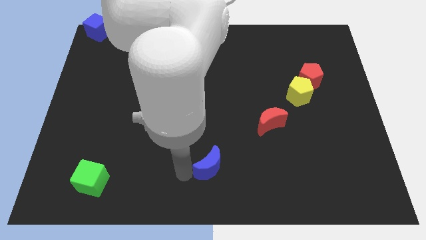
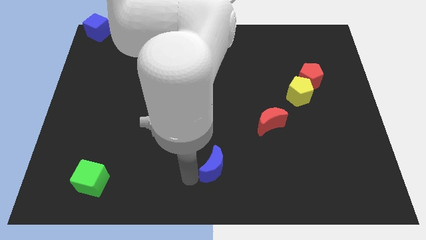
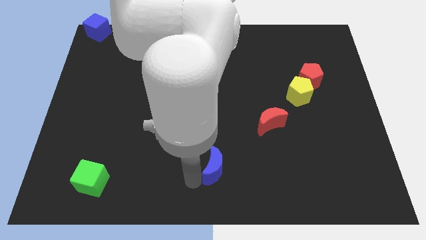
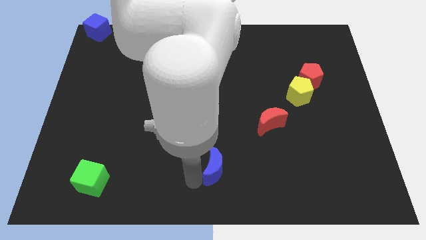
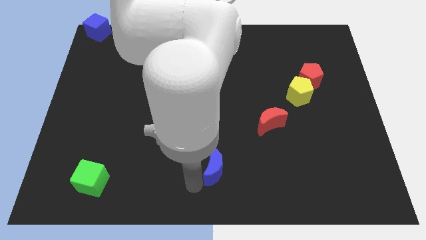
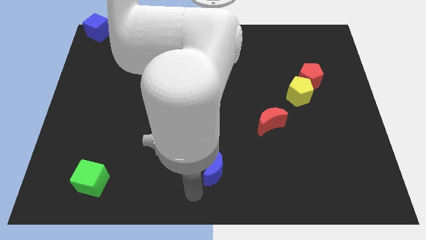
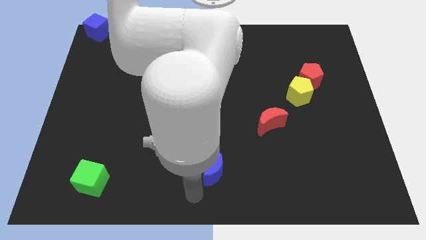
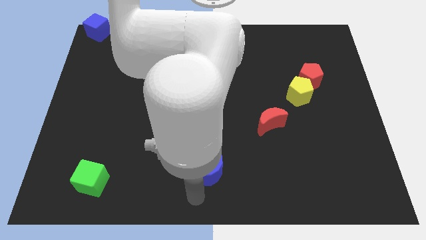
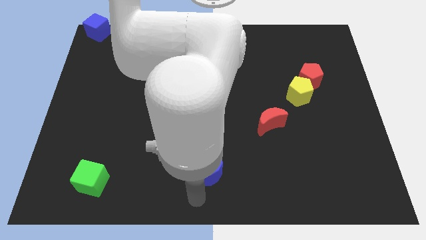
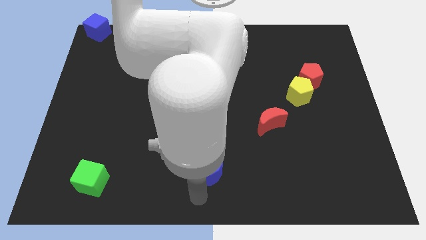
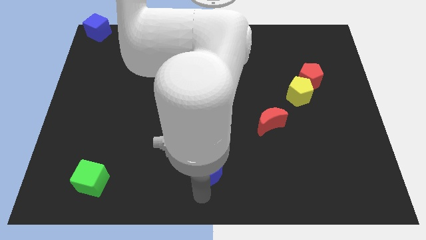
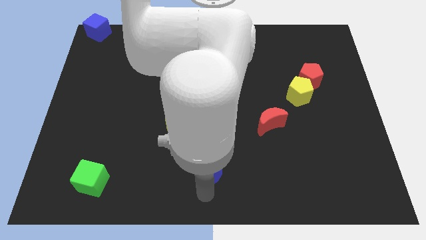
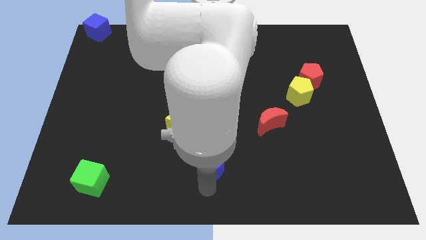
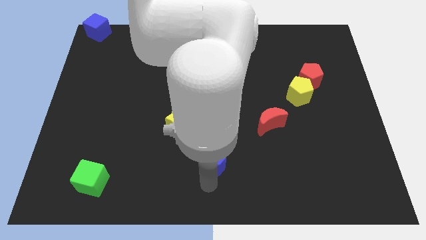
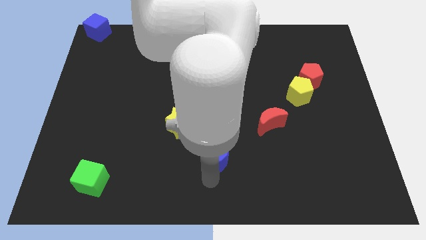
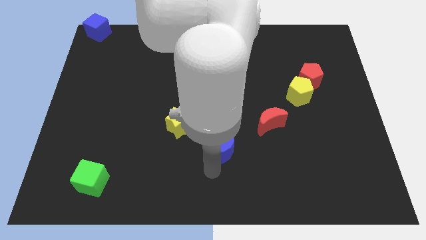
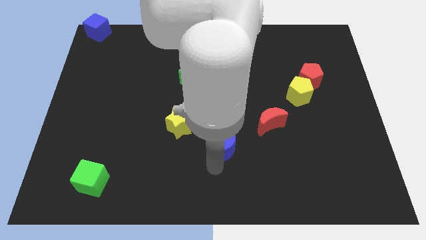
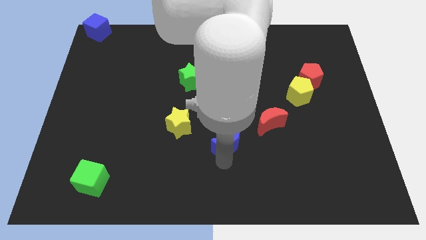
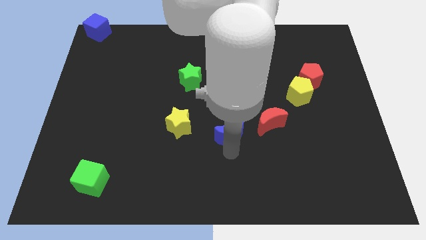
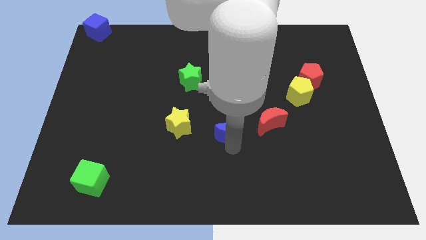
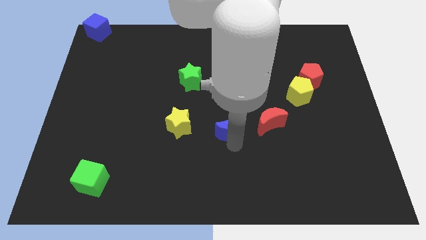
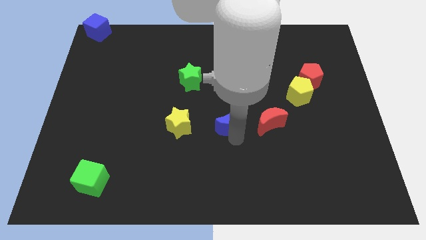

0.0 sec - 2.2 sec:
place the blue moon in between the red moon and yellow star

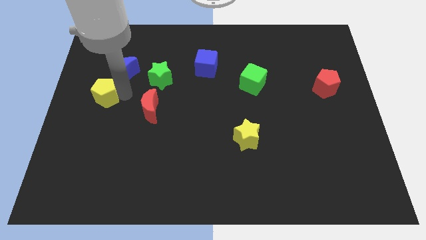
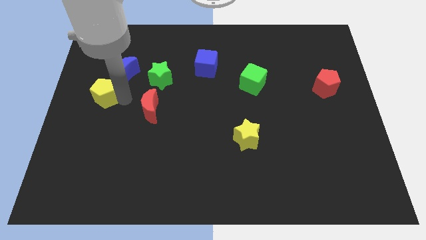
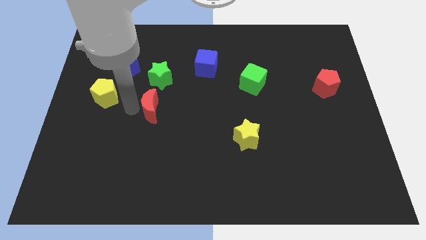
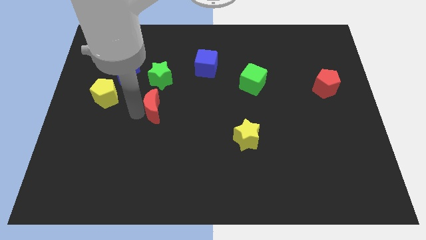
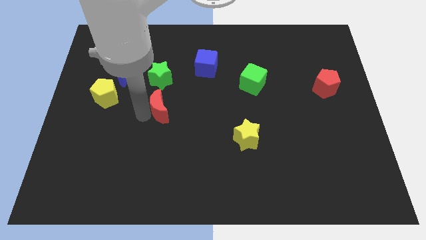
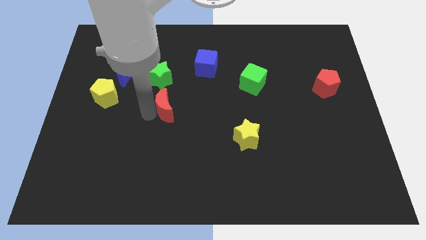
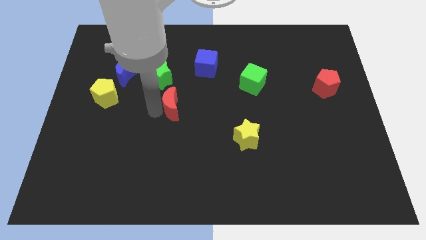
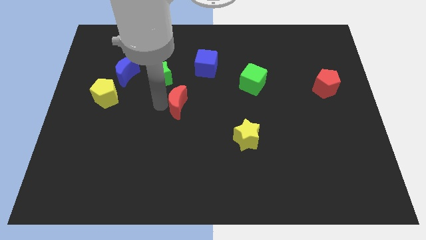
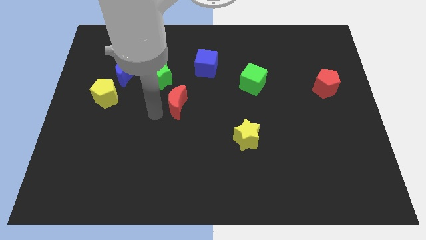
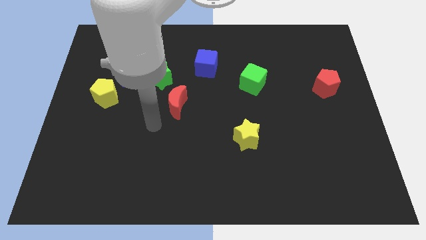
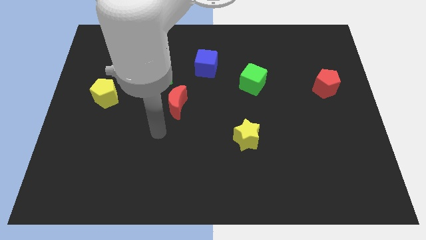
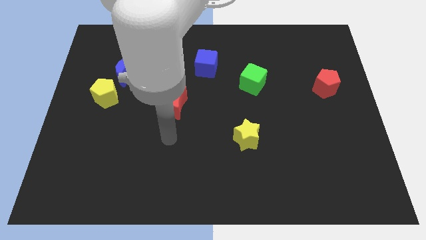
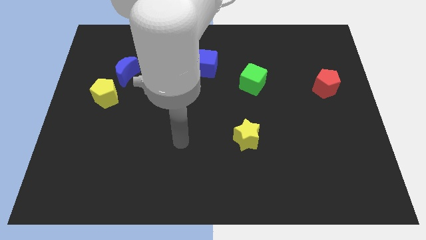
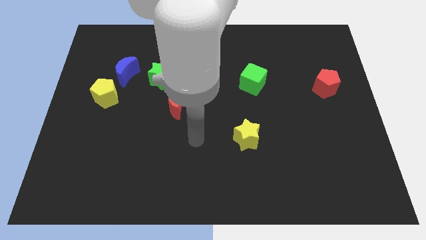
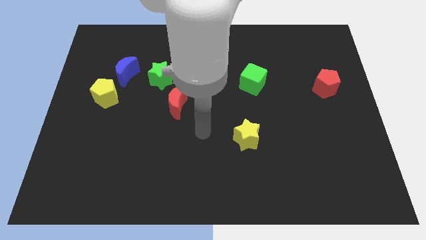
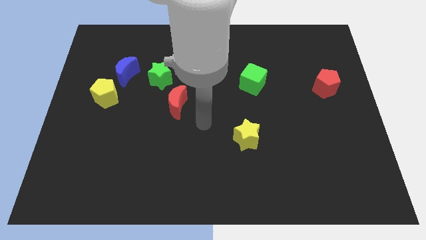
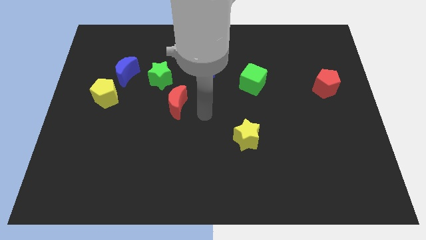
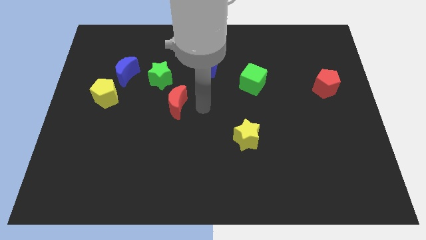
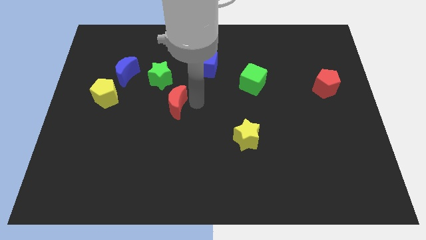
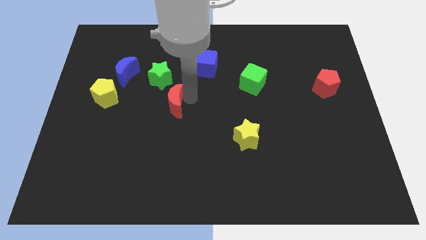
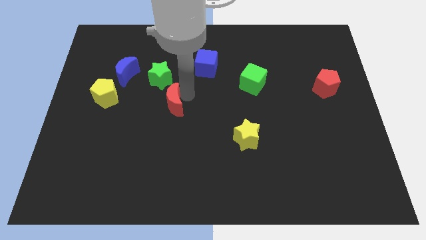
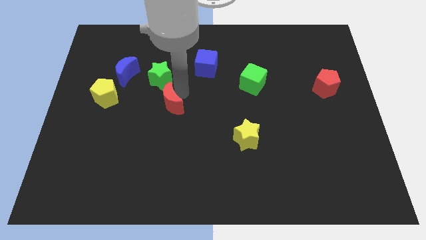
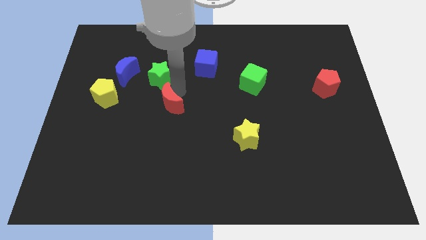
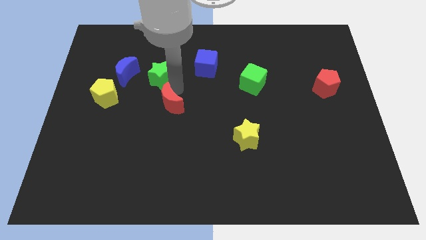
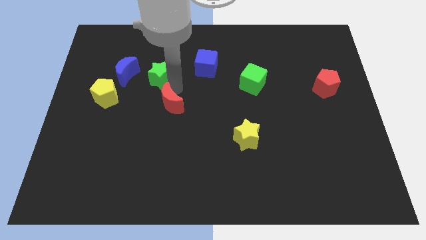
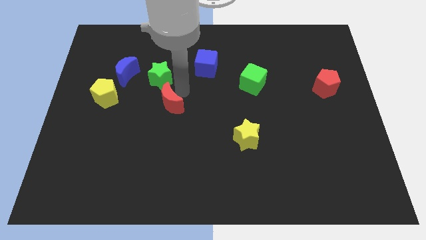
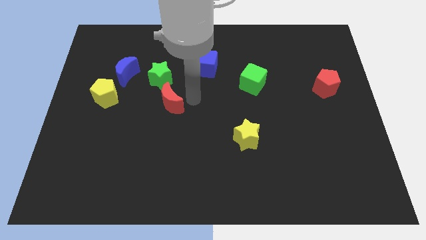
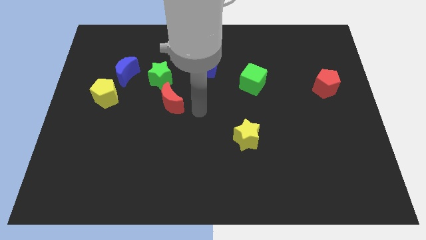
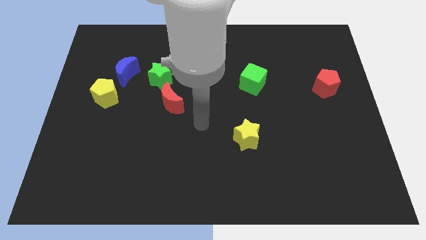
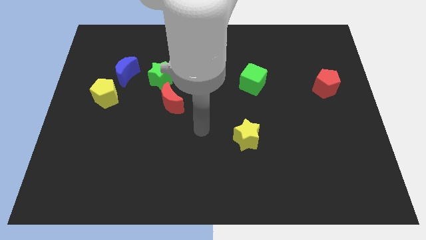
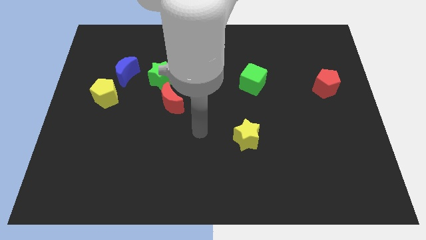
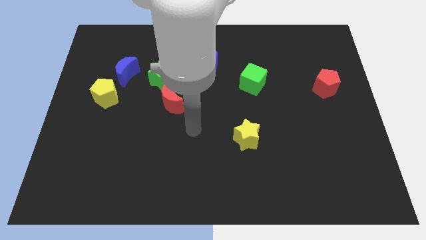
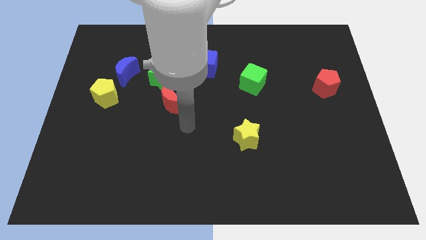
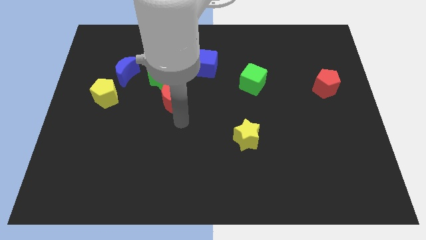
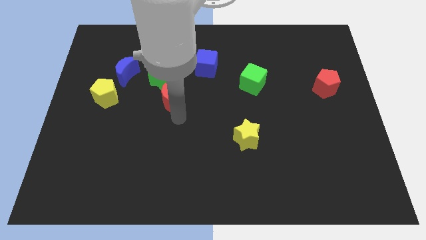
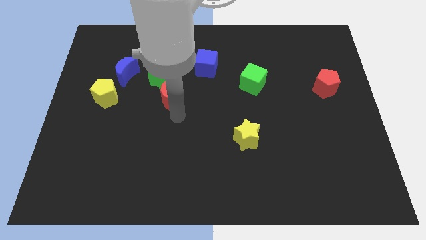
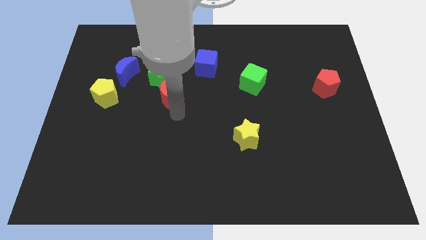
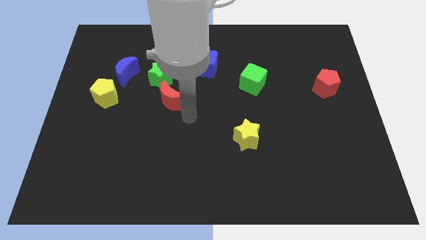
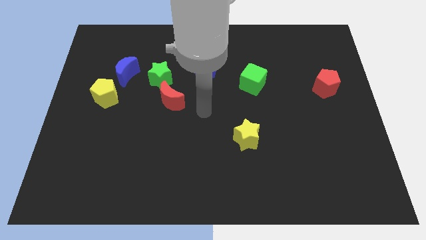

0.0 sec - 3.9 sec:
place the red crescent close to the green star

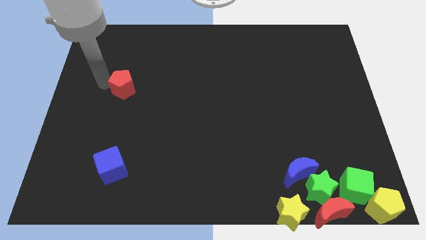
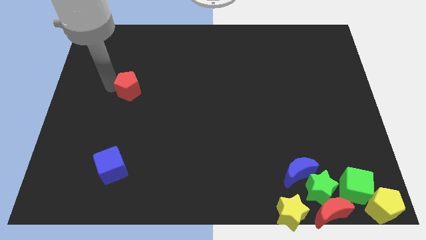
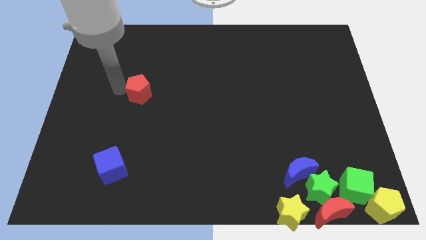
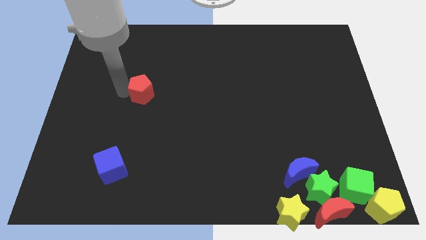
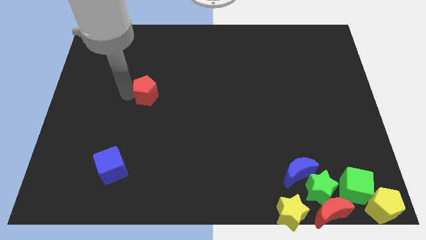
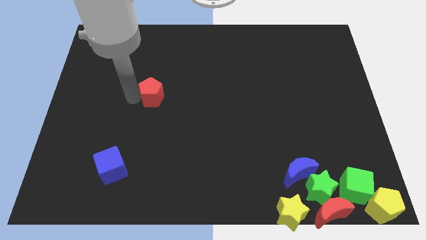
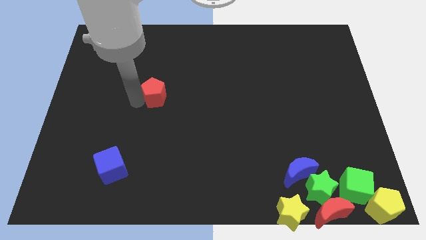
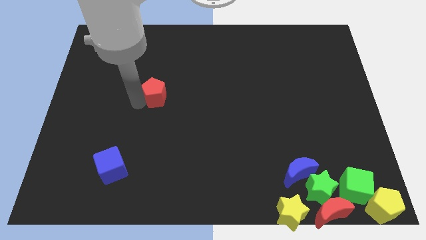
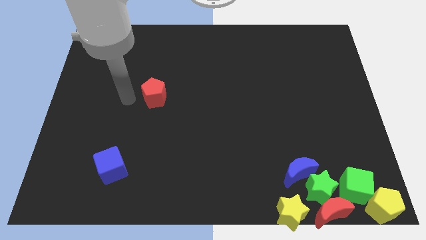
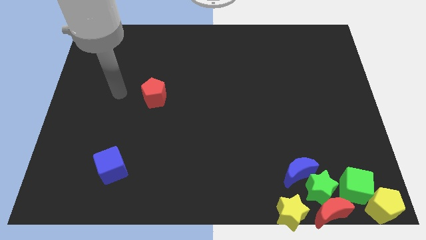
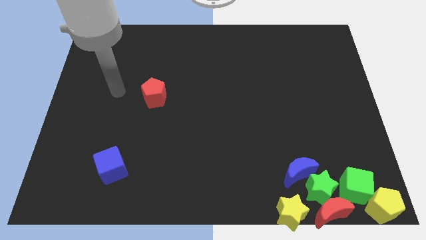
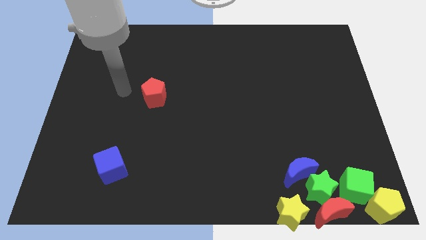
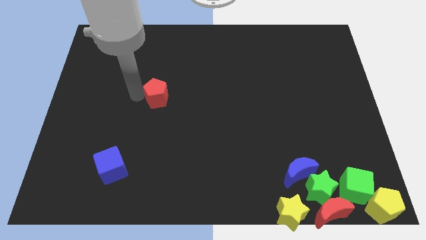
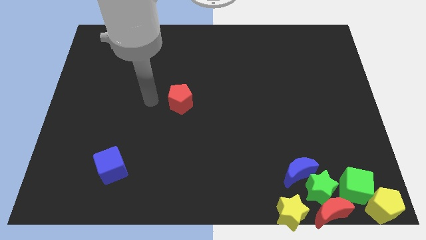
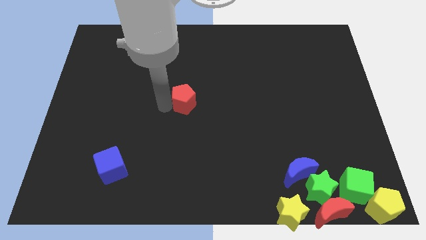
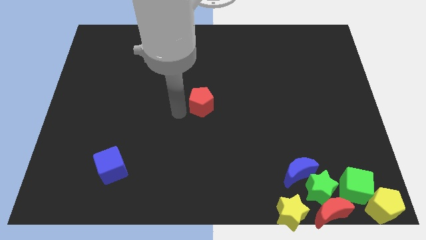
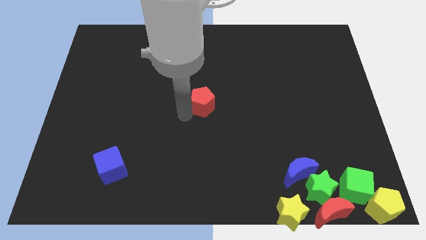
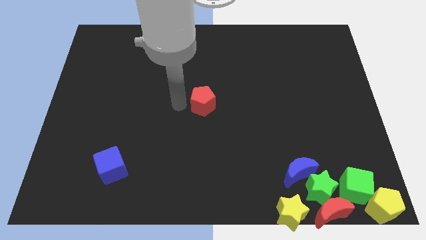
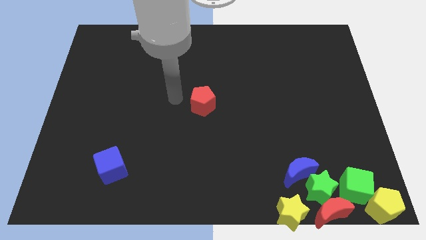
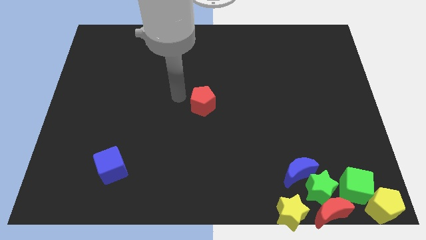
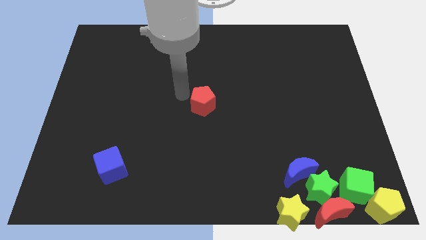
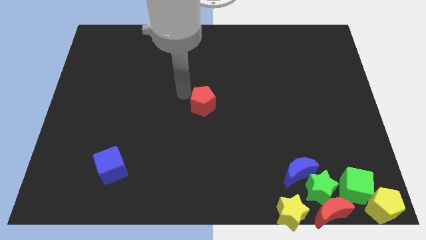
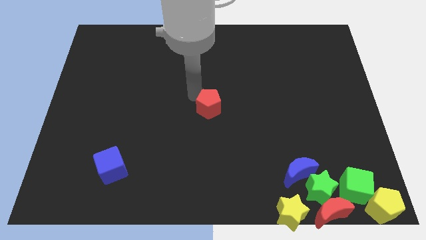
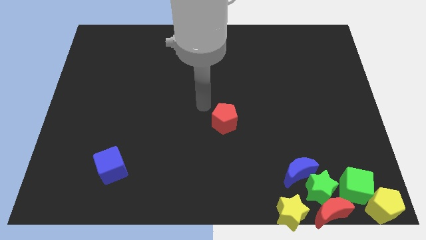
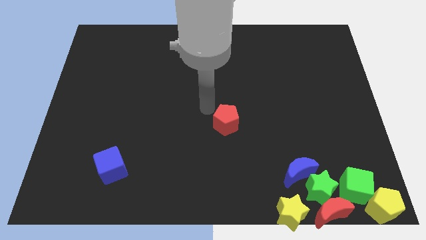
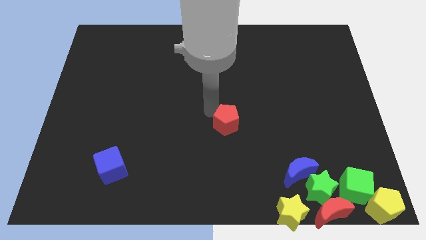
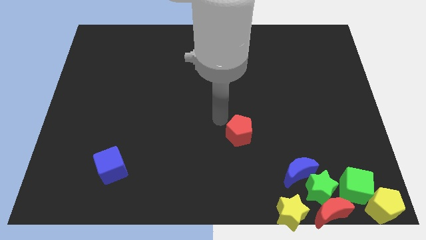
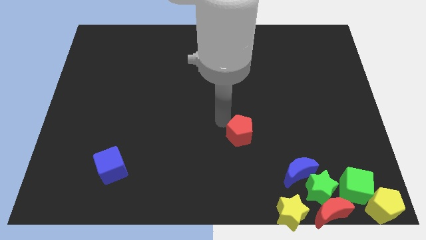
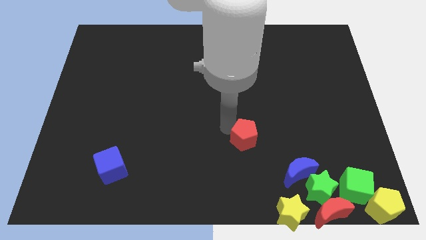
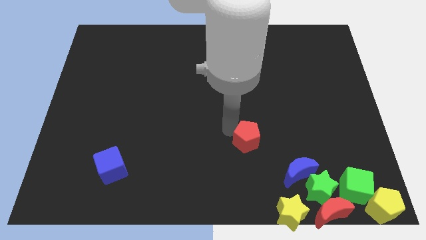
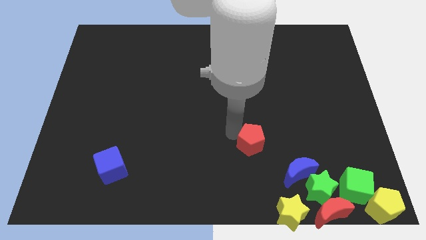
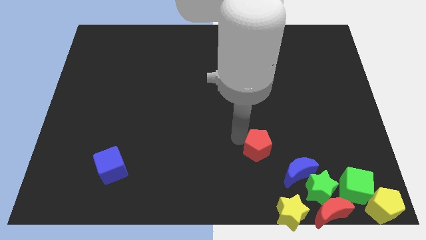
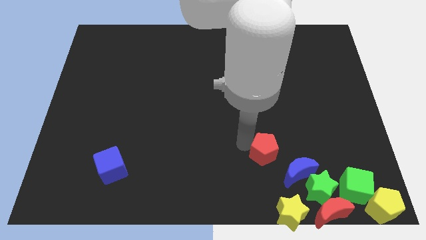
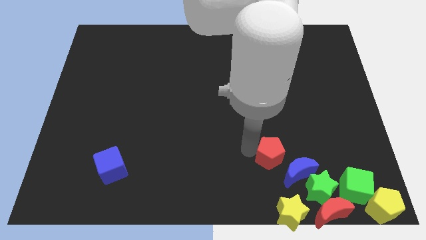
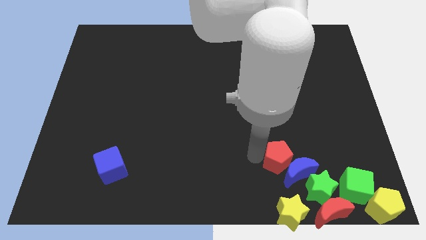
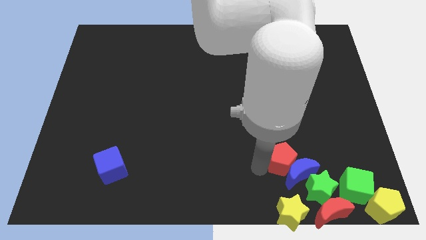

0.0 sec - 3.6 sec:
push the red pentagon into the group of blocks
